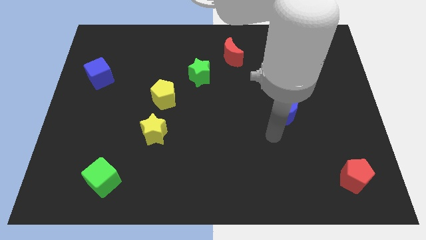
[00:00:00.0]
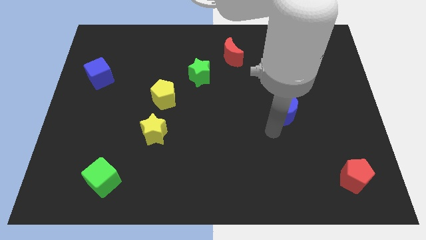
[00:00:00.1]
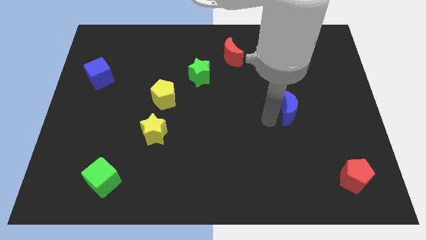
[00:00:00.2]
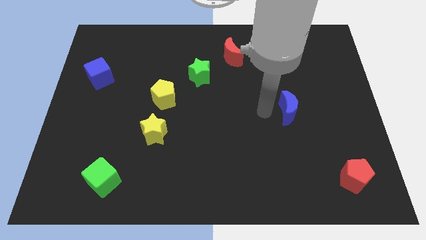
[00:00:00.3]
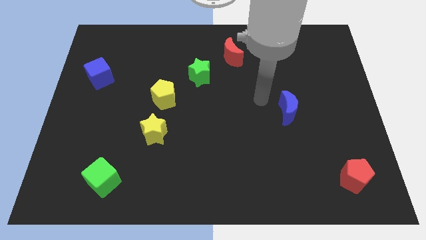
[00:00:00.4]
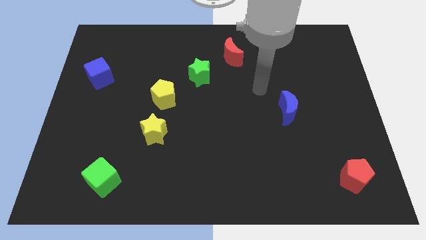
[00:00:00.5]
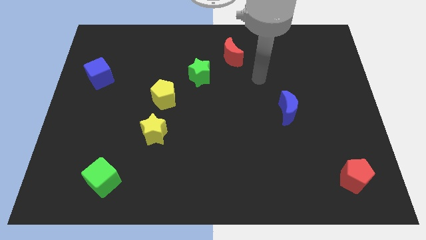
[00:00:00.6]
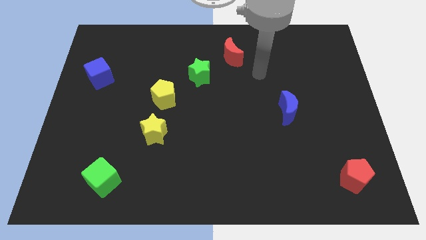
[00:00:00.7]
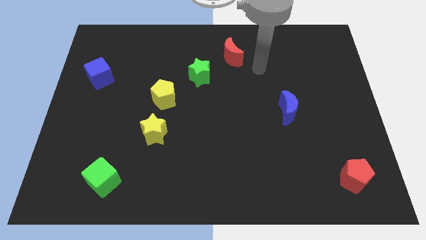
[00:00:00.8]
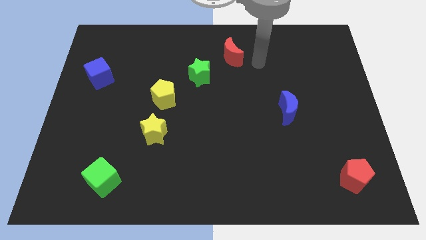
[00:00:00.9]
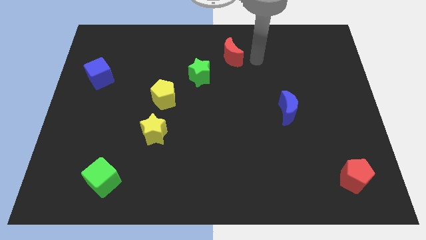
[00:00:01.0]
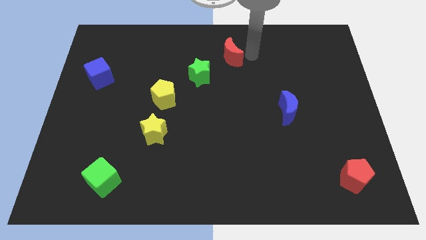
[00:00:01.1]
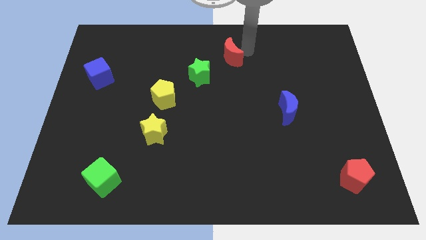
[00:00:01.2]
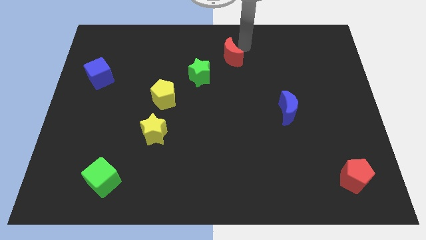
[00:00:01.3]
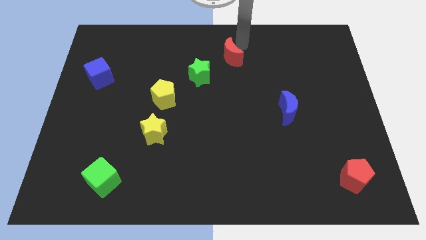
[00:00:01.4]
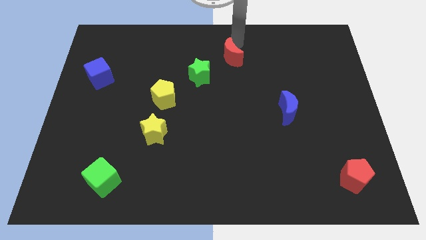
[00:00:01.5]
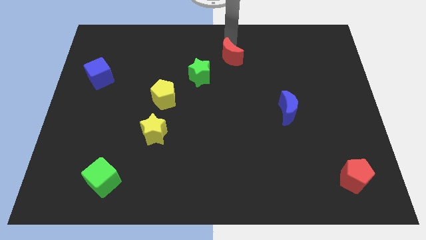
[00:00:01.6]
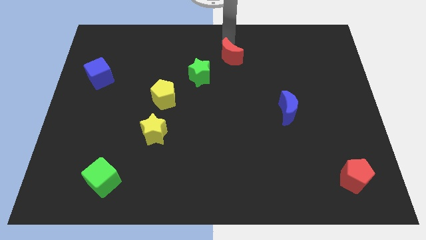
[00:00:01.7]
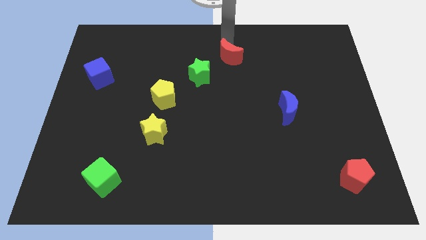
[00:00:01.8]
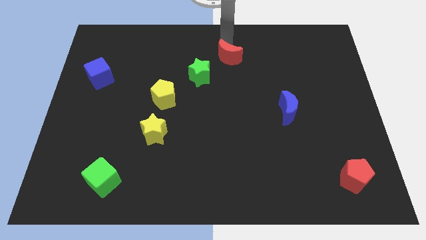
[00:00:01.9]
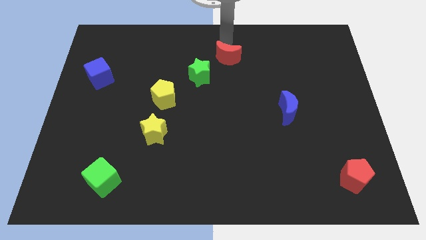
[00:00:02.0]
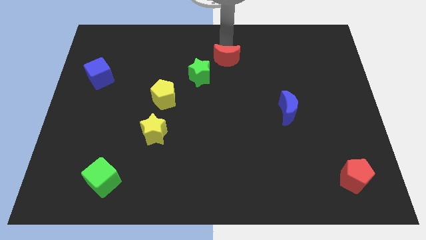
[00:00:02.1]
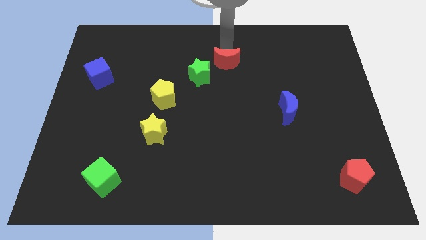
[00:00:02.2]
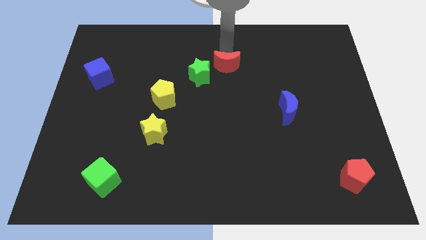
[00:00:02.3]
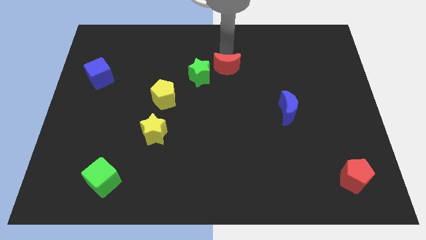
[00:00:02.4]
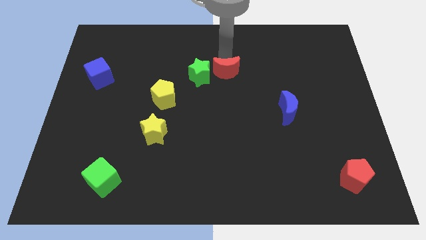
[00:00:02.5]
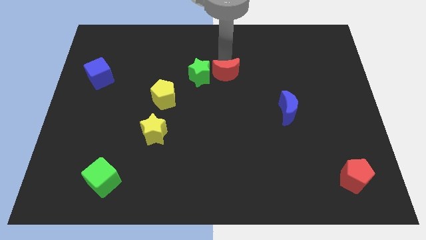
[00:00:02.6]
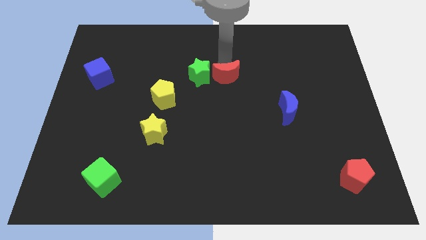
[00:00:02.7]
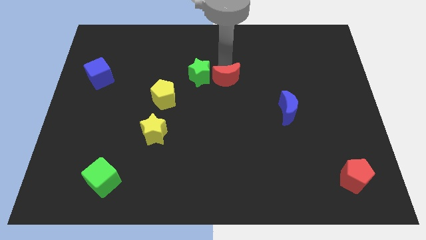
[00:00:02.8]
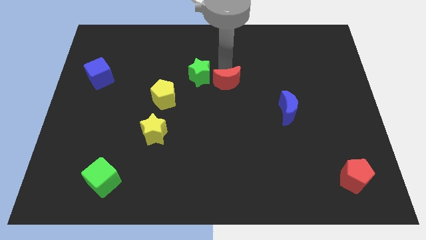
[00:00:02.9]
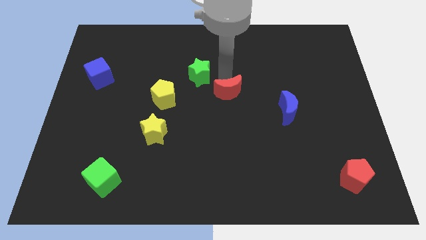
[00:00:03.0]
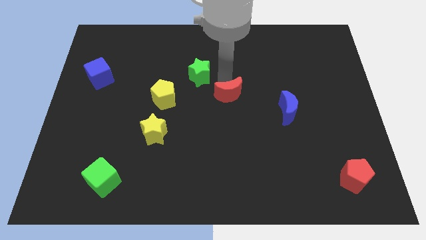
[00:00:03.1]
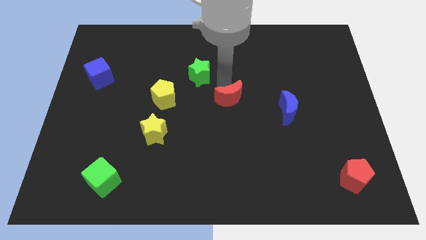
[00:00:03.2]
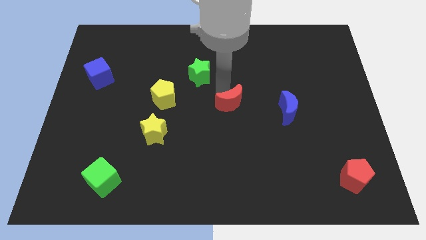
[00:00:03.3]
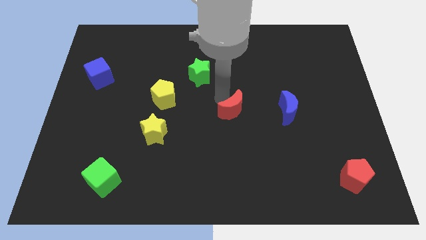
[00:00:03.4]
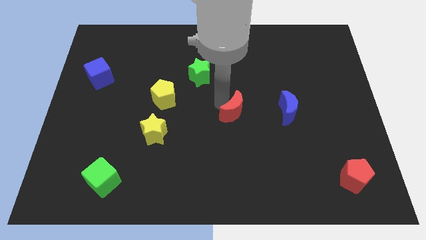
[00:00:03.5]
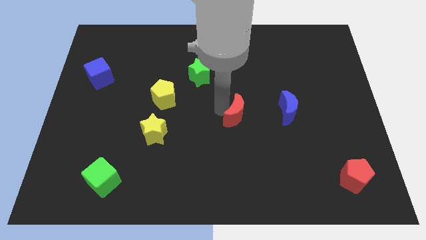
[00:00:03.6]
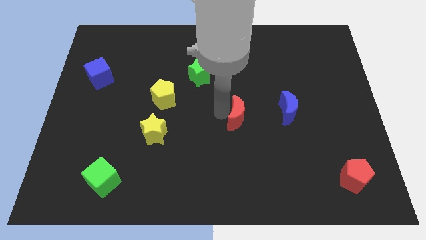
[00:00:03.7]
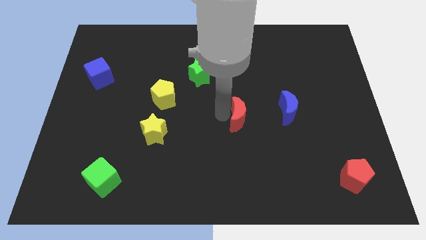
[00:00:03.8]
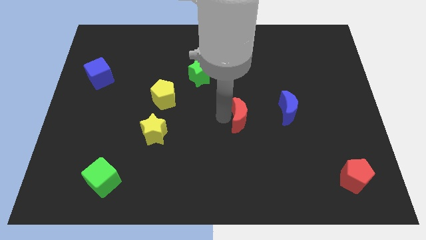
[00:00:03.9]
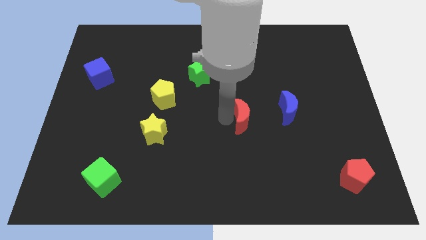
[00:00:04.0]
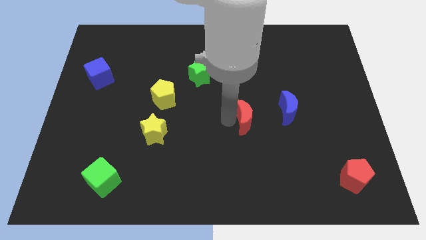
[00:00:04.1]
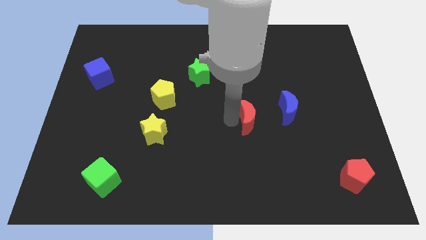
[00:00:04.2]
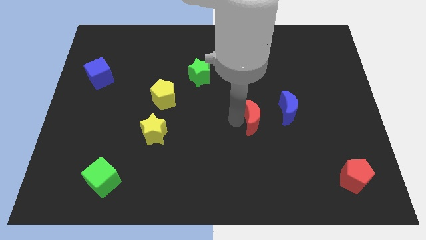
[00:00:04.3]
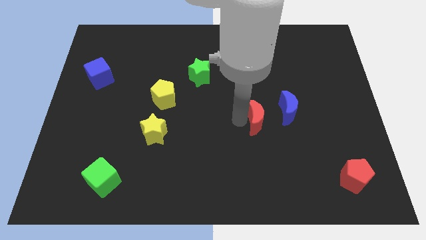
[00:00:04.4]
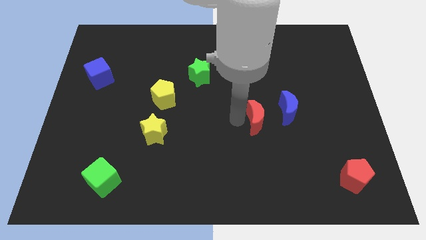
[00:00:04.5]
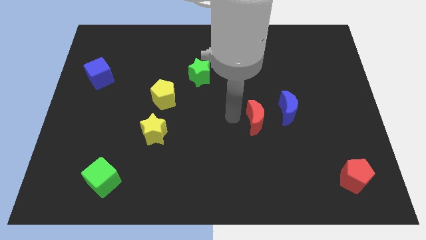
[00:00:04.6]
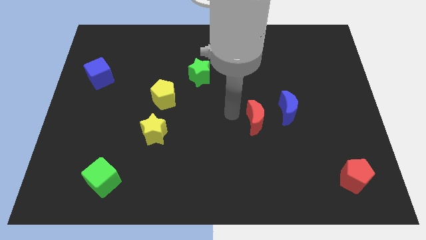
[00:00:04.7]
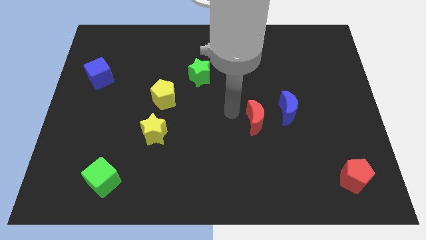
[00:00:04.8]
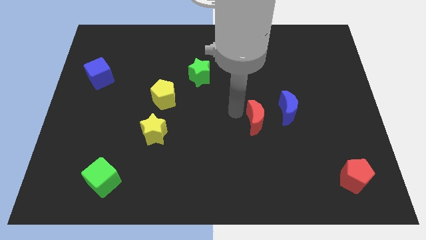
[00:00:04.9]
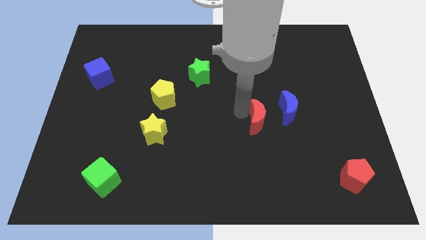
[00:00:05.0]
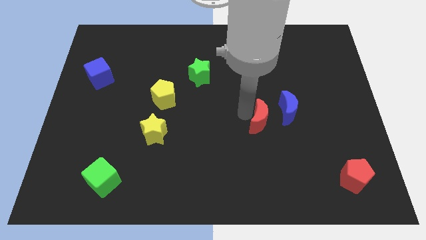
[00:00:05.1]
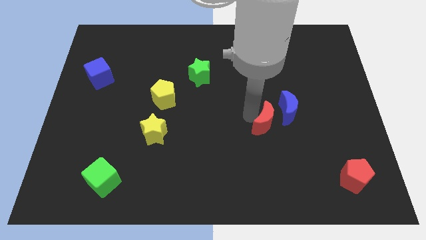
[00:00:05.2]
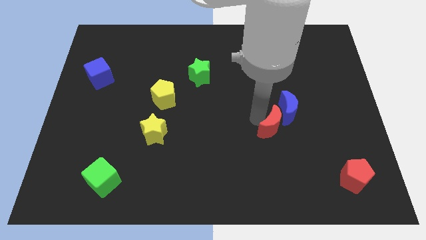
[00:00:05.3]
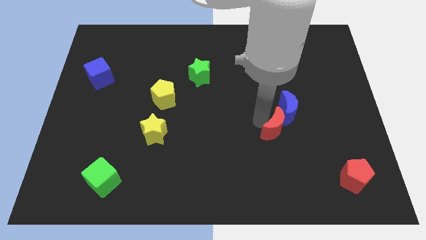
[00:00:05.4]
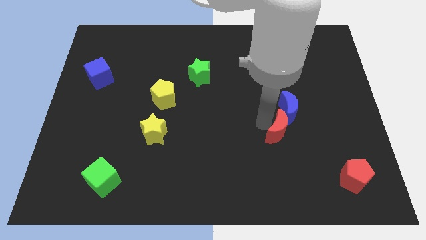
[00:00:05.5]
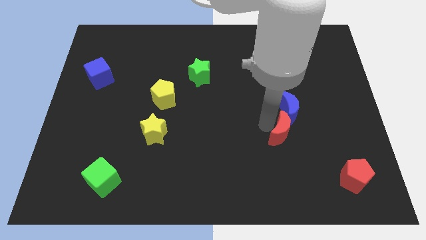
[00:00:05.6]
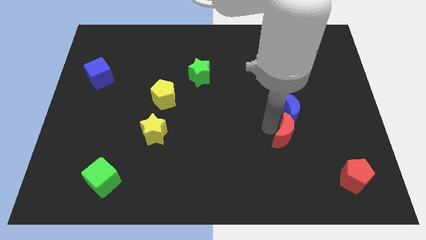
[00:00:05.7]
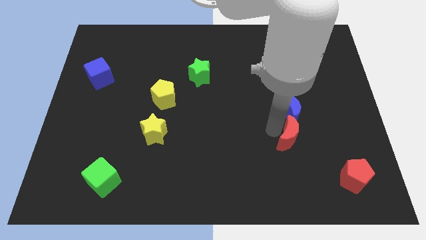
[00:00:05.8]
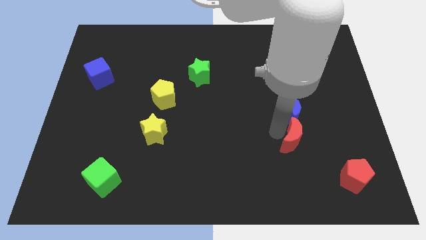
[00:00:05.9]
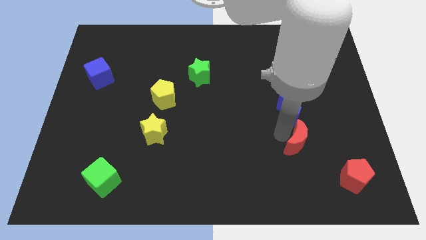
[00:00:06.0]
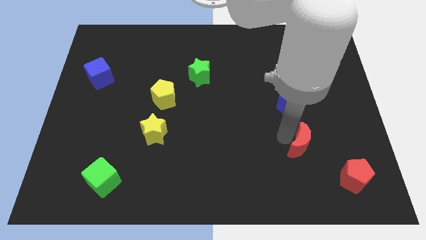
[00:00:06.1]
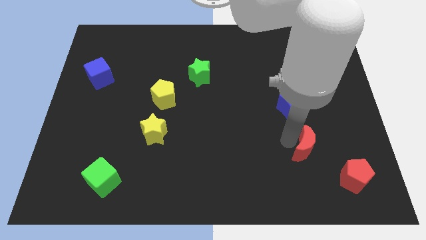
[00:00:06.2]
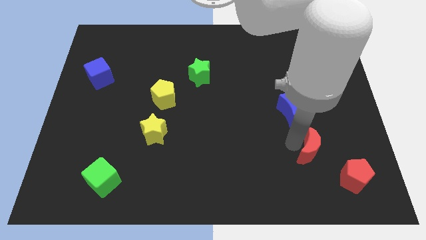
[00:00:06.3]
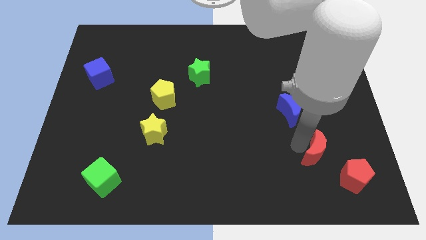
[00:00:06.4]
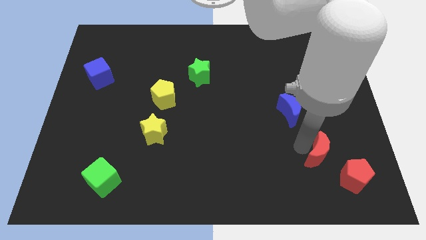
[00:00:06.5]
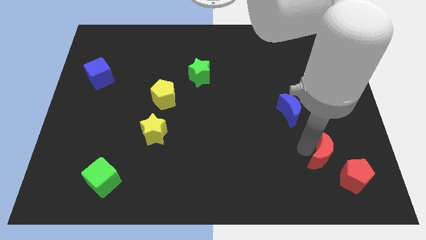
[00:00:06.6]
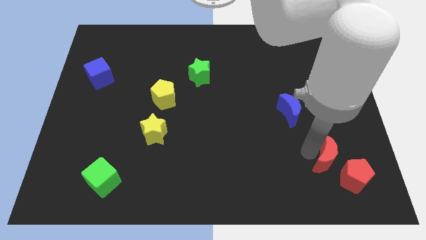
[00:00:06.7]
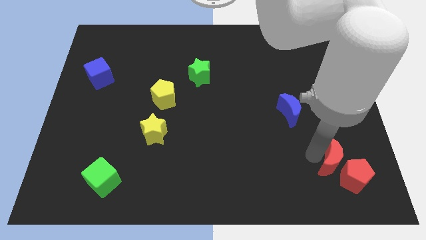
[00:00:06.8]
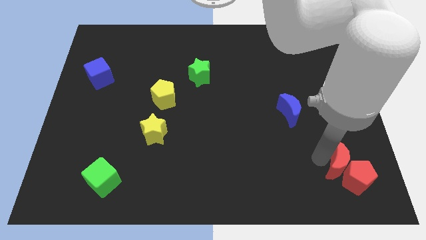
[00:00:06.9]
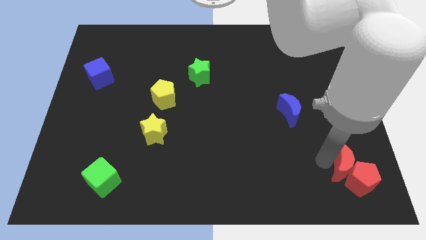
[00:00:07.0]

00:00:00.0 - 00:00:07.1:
push the red moon close to the red pentagon

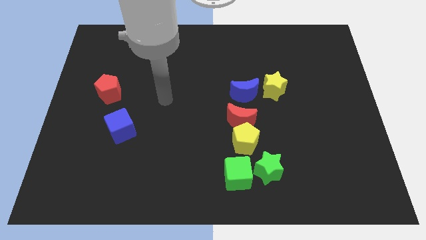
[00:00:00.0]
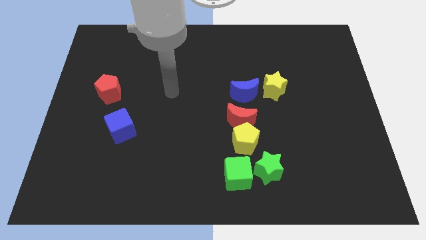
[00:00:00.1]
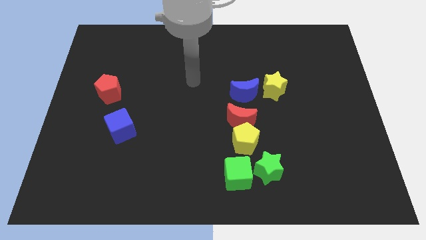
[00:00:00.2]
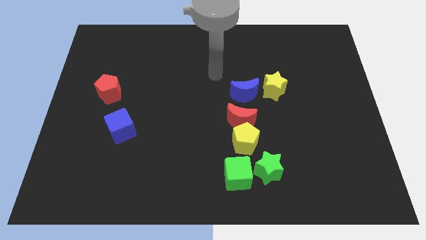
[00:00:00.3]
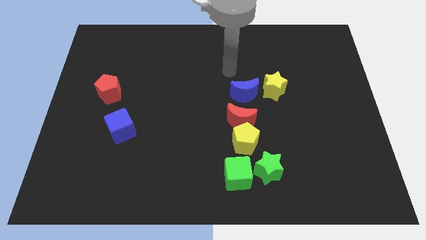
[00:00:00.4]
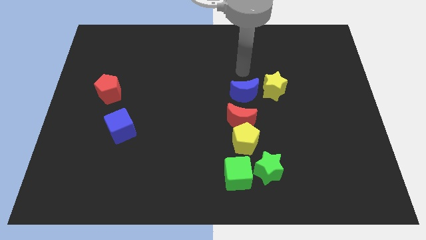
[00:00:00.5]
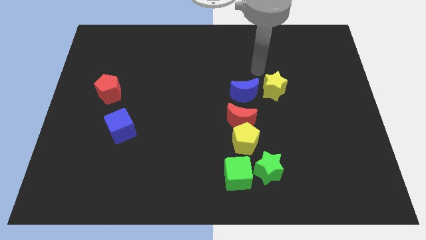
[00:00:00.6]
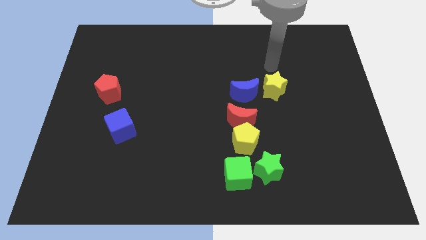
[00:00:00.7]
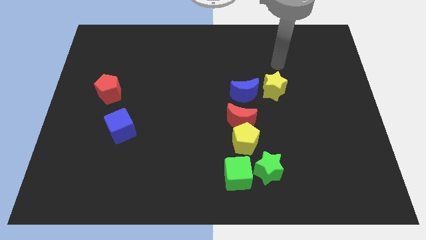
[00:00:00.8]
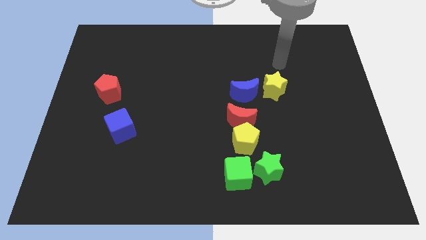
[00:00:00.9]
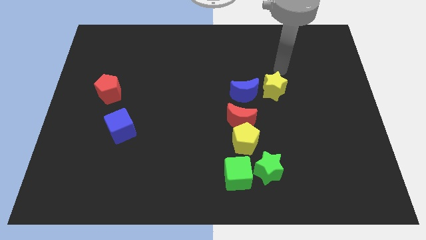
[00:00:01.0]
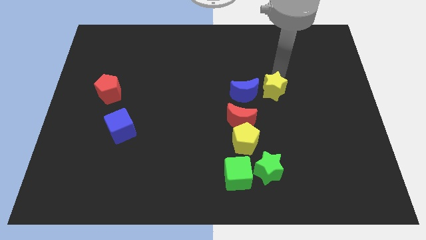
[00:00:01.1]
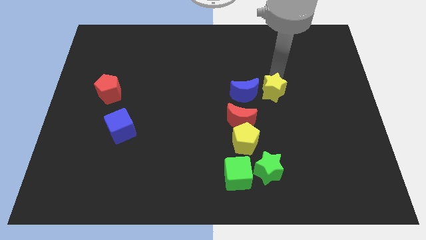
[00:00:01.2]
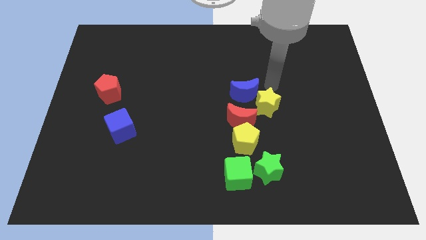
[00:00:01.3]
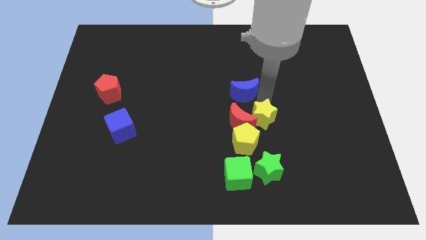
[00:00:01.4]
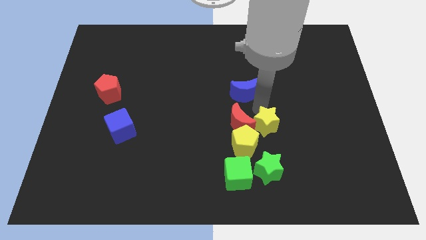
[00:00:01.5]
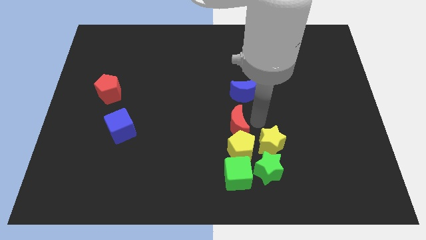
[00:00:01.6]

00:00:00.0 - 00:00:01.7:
put the yellow star towards the green star
